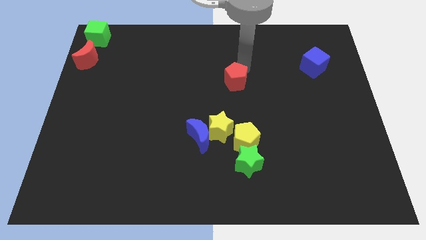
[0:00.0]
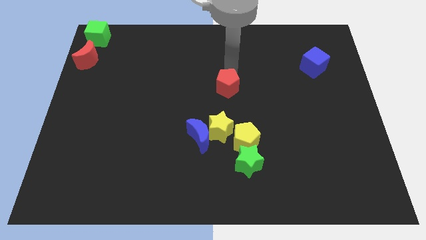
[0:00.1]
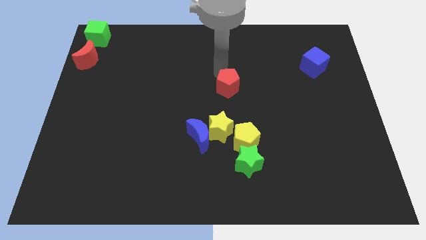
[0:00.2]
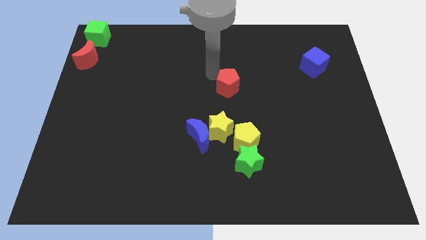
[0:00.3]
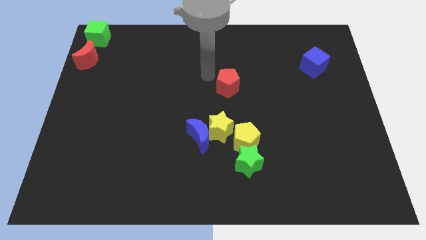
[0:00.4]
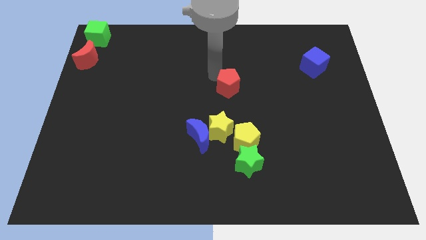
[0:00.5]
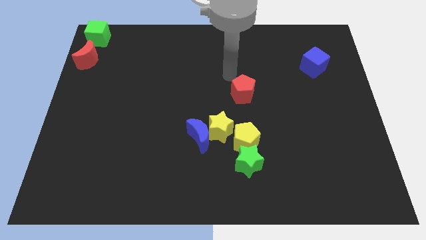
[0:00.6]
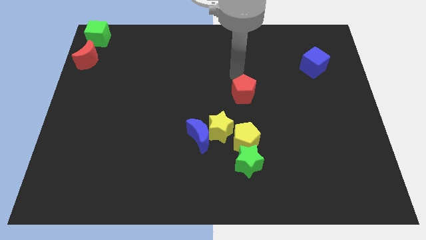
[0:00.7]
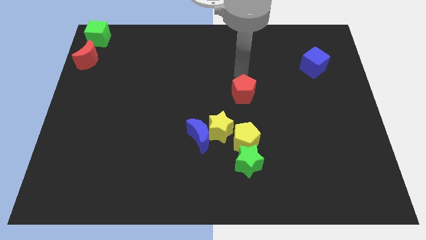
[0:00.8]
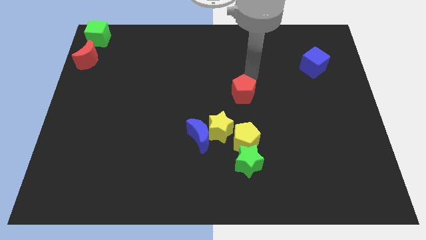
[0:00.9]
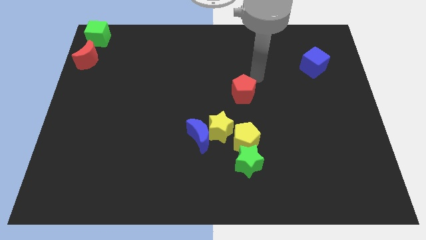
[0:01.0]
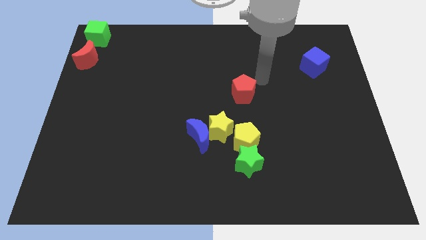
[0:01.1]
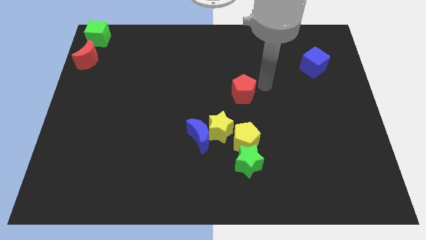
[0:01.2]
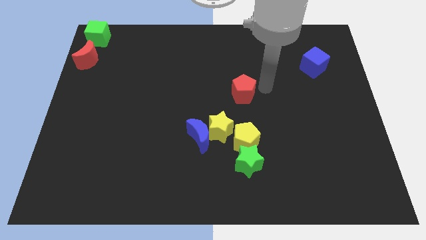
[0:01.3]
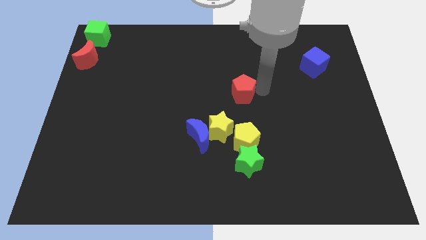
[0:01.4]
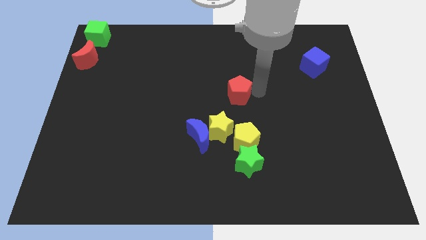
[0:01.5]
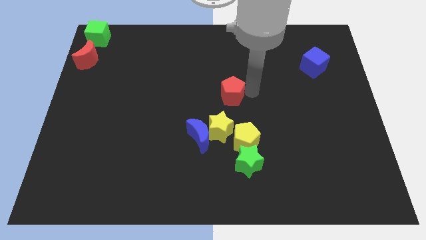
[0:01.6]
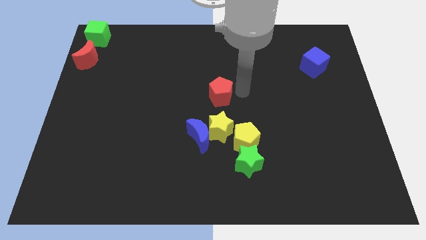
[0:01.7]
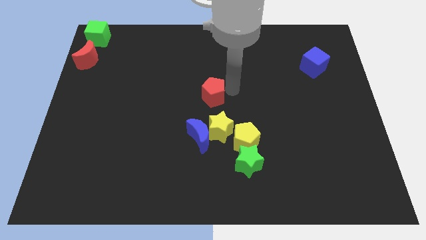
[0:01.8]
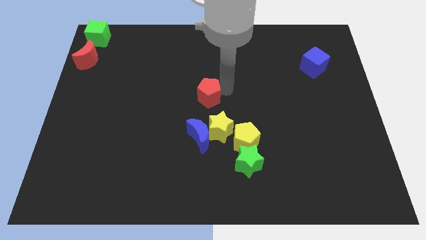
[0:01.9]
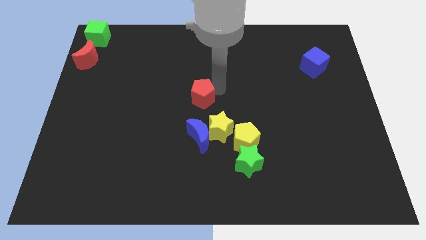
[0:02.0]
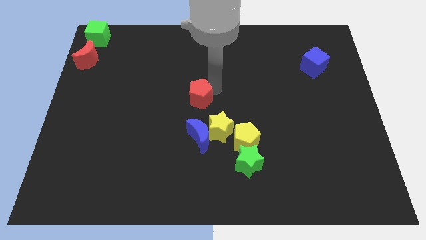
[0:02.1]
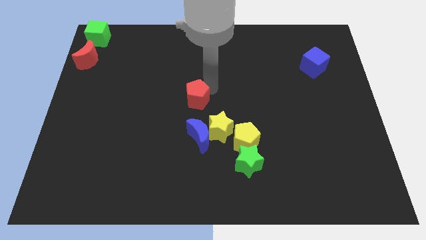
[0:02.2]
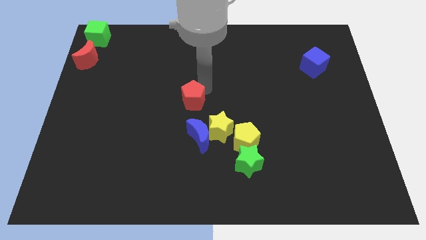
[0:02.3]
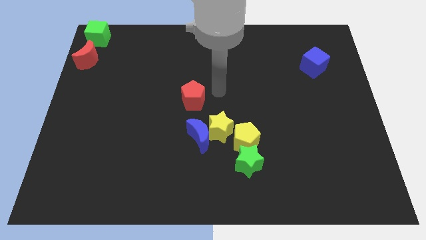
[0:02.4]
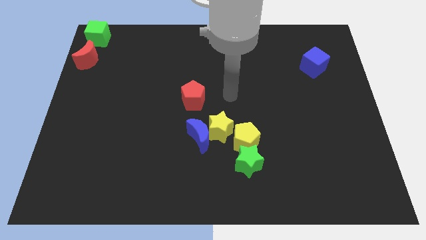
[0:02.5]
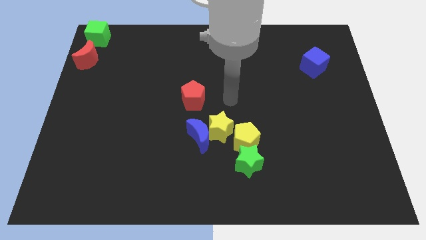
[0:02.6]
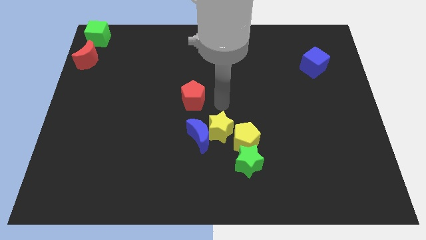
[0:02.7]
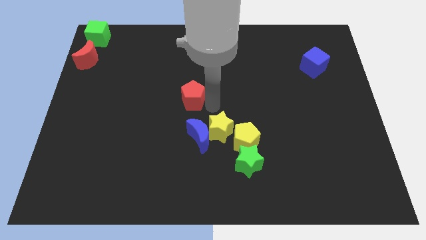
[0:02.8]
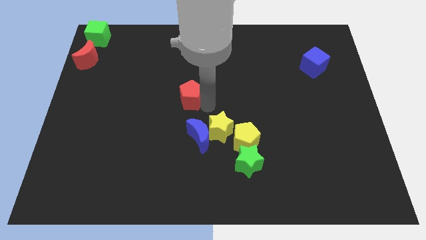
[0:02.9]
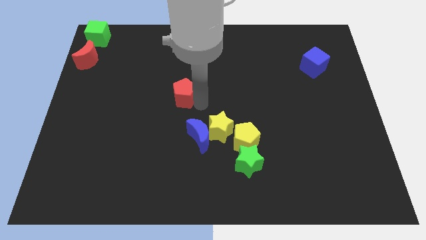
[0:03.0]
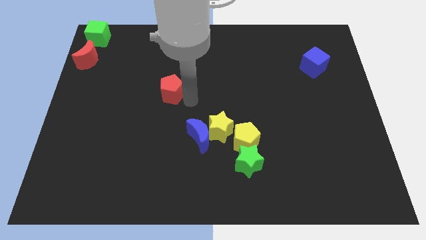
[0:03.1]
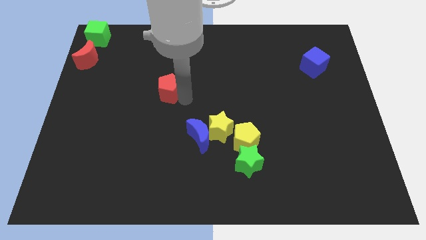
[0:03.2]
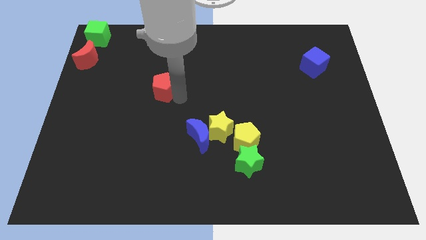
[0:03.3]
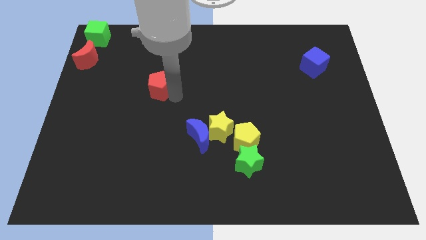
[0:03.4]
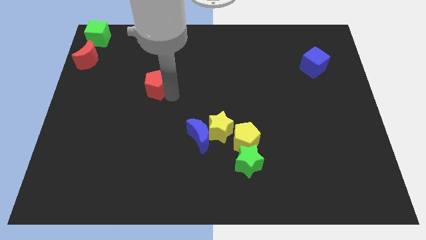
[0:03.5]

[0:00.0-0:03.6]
move the red pentagon to the top left of the blue crescent

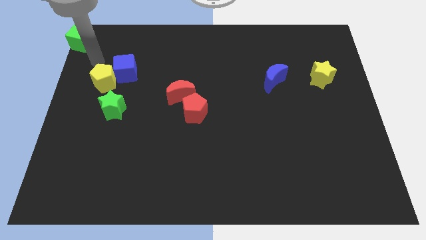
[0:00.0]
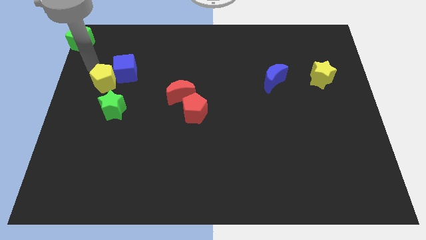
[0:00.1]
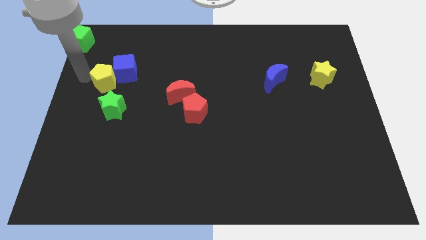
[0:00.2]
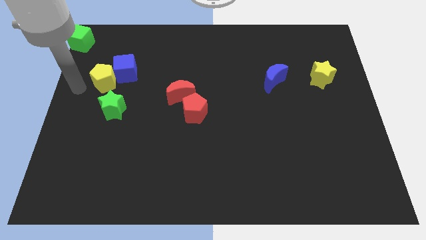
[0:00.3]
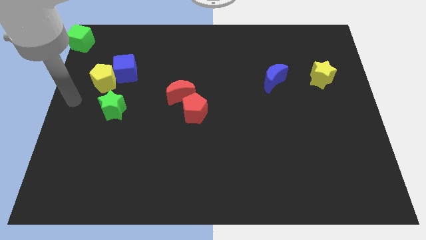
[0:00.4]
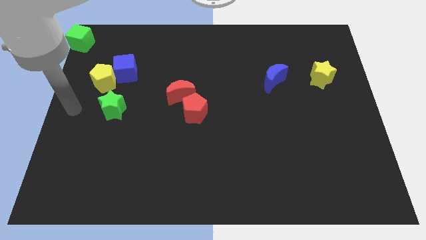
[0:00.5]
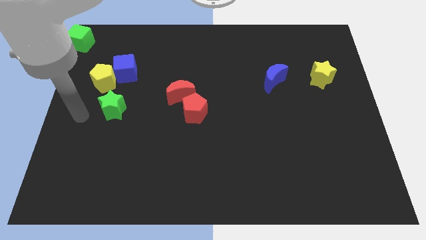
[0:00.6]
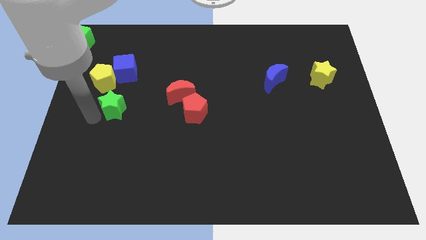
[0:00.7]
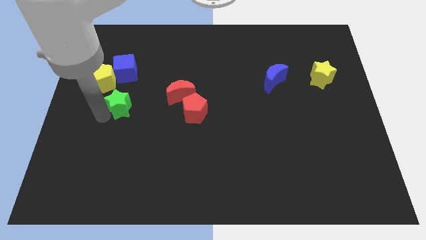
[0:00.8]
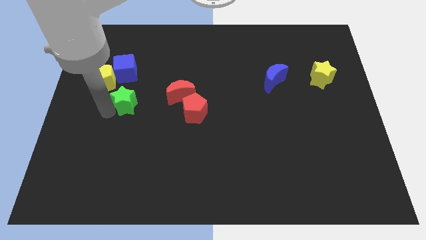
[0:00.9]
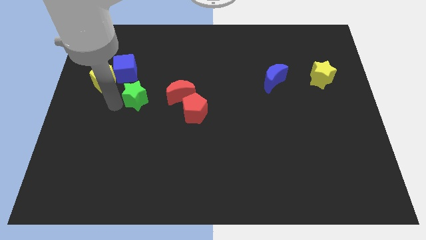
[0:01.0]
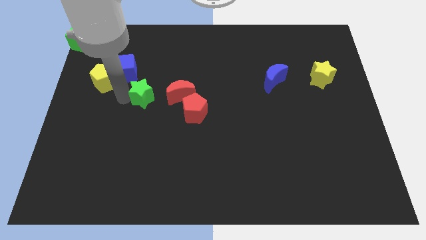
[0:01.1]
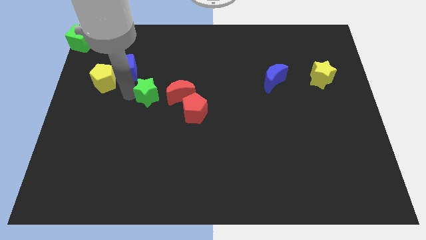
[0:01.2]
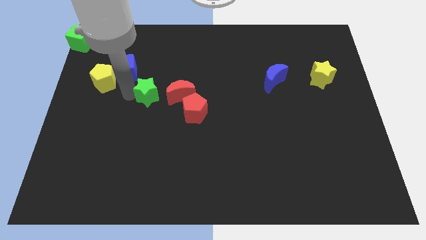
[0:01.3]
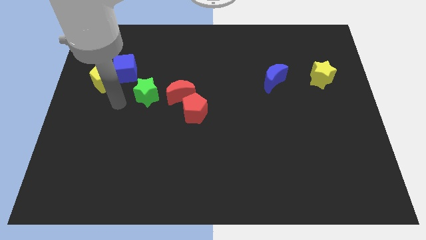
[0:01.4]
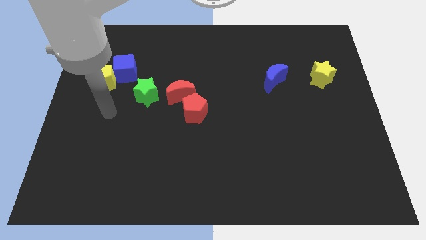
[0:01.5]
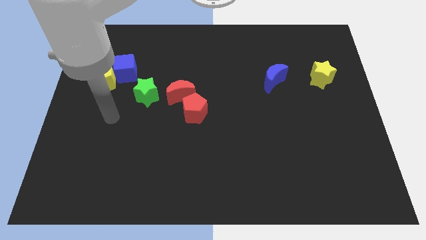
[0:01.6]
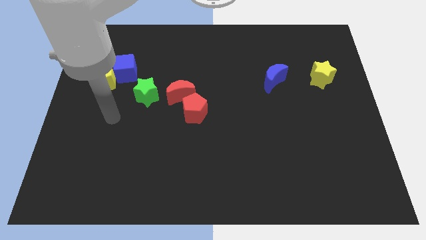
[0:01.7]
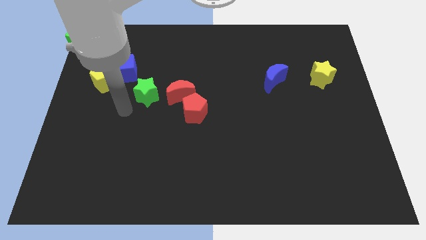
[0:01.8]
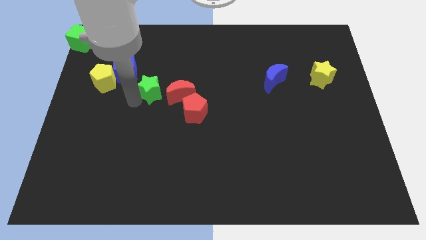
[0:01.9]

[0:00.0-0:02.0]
put the green star between the blue cube and red moon

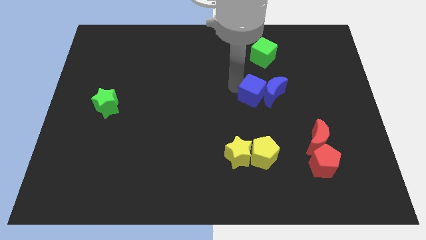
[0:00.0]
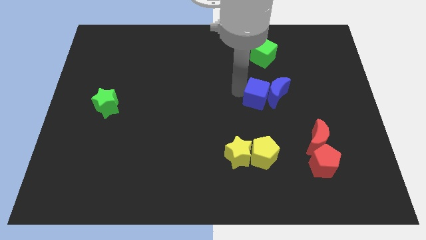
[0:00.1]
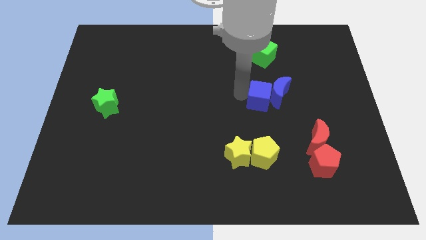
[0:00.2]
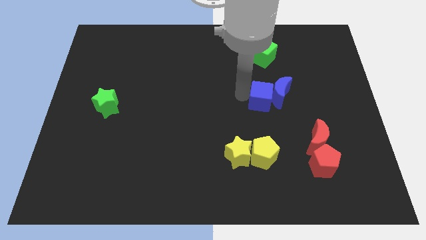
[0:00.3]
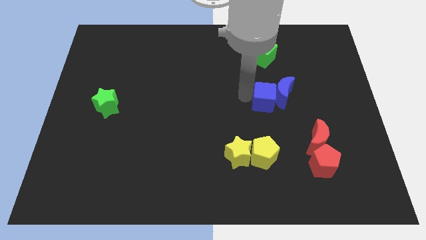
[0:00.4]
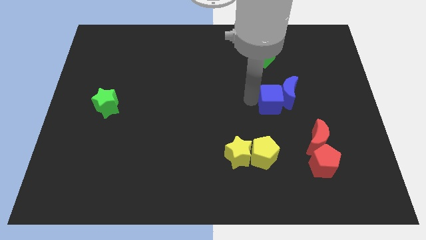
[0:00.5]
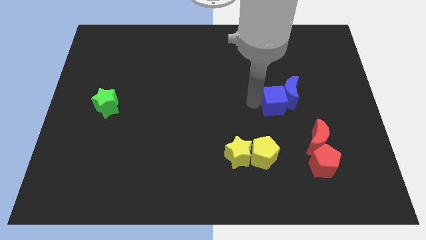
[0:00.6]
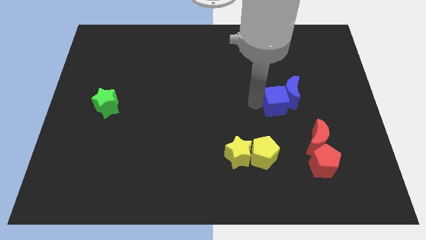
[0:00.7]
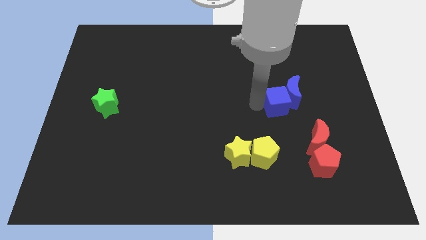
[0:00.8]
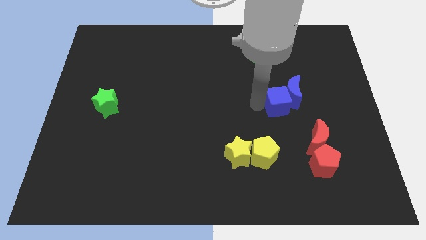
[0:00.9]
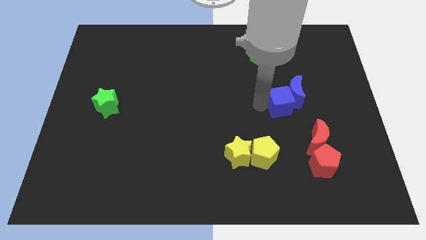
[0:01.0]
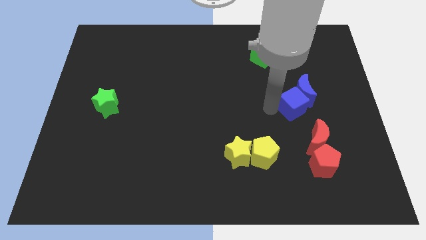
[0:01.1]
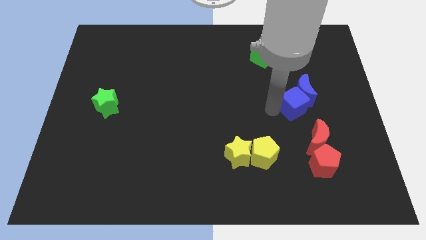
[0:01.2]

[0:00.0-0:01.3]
move the blue cube and blue crescent to the right side of the board

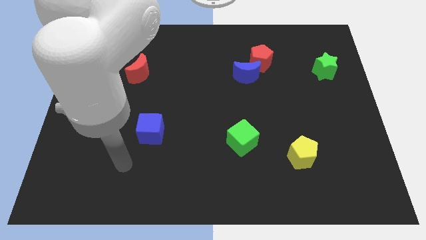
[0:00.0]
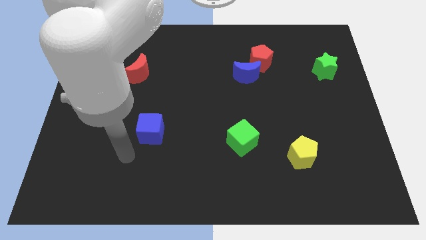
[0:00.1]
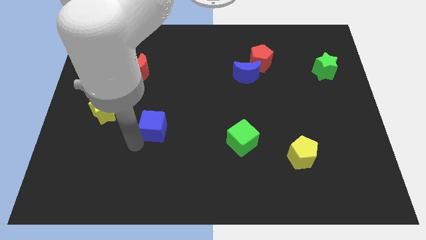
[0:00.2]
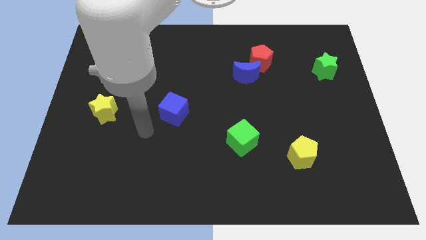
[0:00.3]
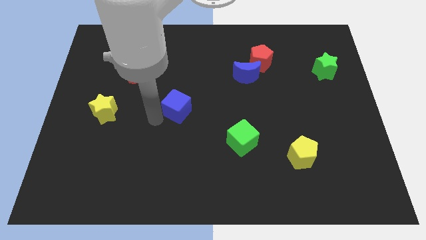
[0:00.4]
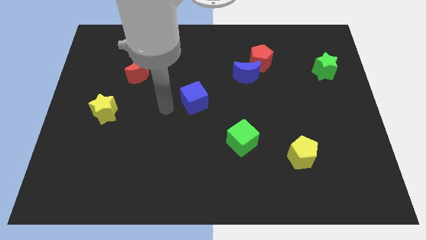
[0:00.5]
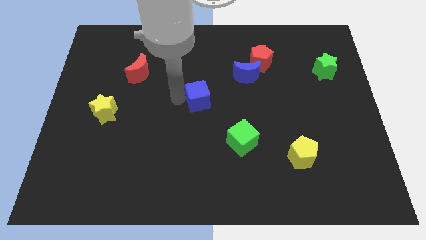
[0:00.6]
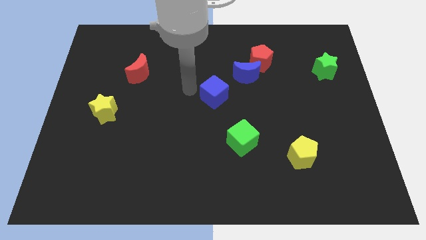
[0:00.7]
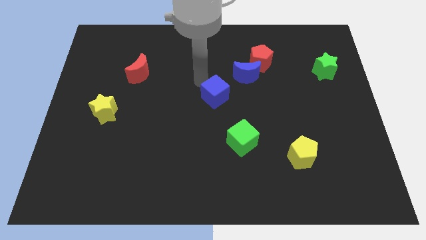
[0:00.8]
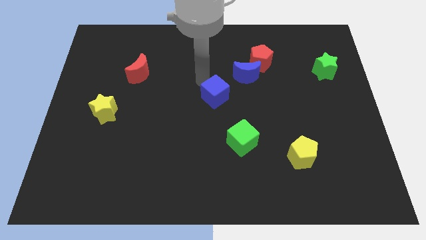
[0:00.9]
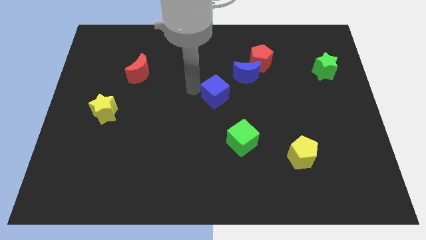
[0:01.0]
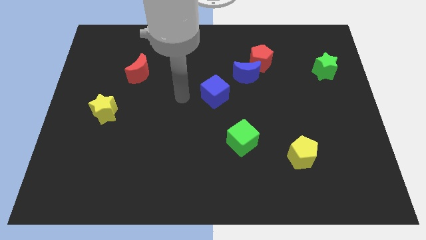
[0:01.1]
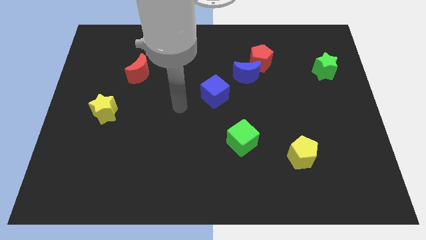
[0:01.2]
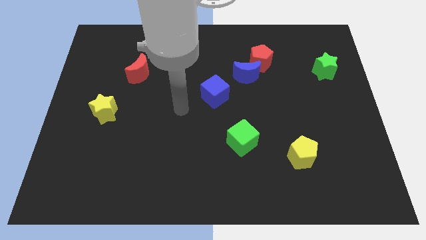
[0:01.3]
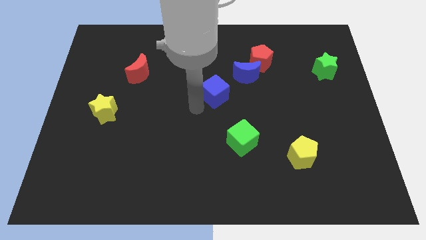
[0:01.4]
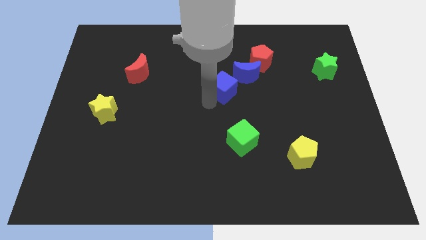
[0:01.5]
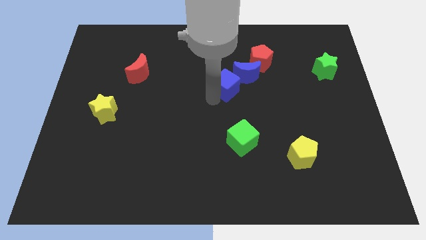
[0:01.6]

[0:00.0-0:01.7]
move the blue cube towards the bottom of the blue crescent

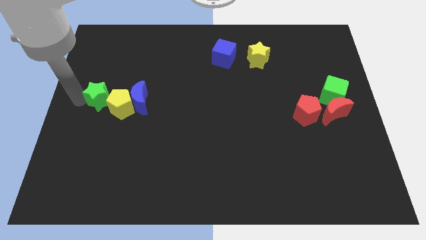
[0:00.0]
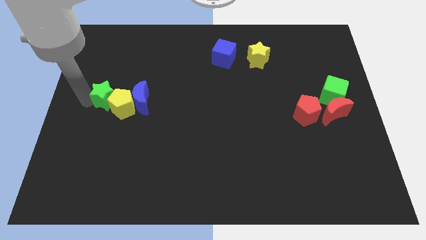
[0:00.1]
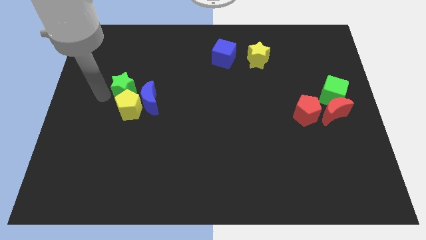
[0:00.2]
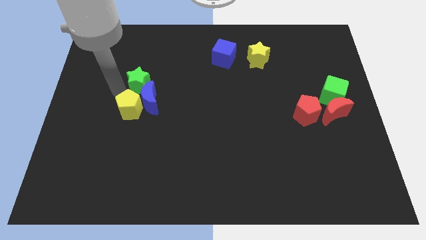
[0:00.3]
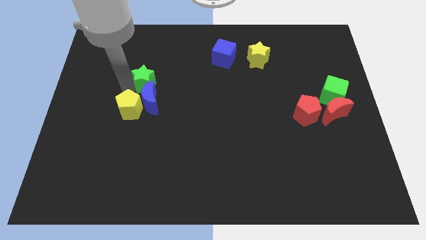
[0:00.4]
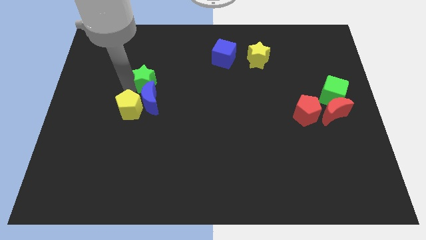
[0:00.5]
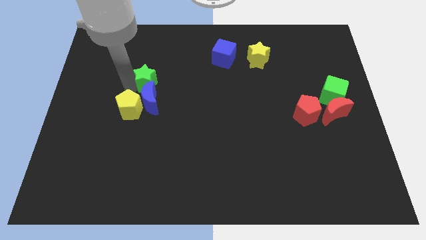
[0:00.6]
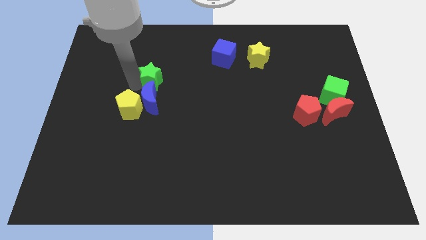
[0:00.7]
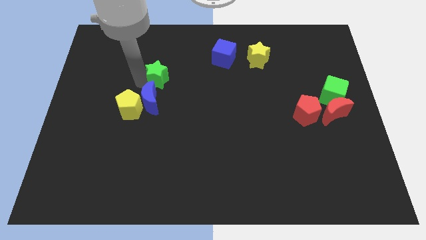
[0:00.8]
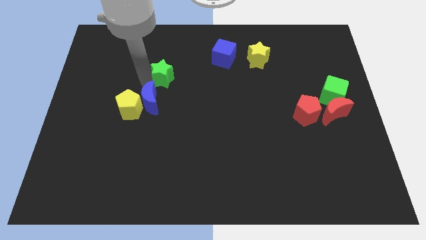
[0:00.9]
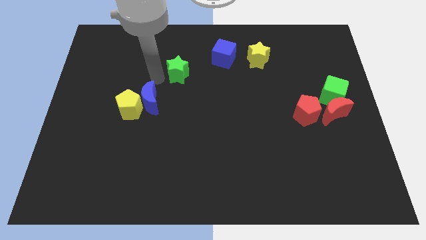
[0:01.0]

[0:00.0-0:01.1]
separate green star from yellow pentagon
